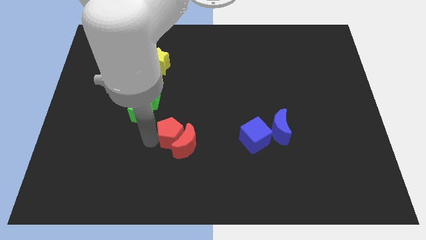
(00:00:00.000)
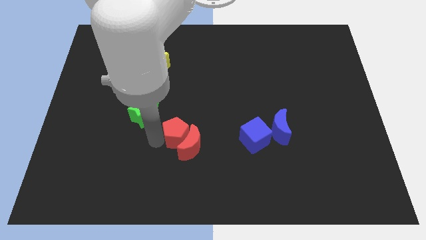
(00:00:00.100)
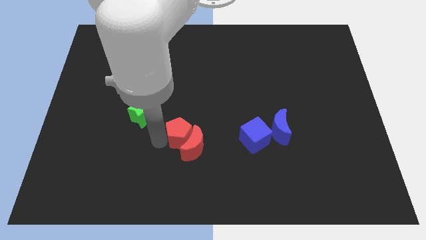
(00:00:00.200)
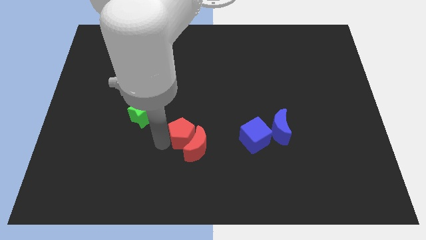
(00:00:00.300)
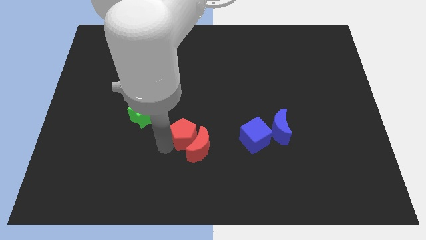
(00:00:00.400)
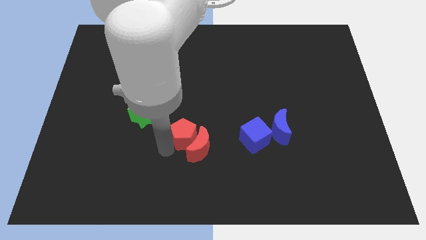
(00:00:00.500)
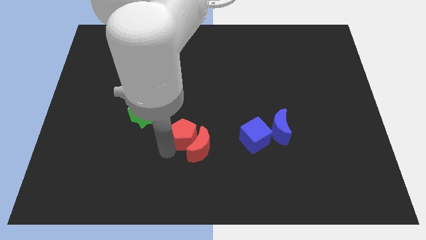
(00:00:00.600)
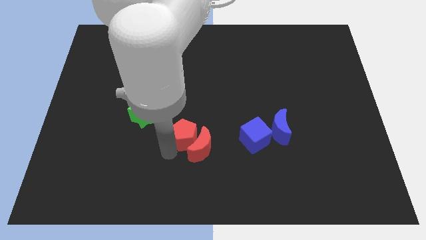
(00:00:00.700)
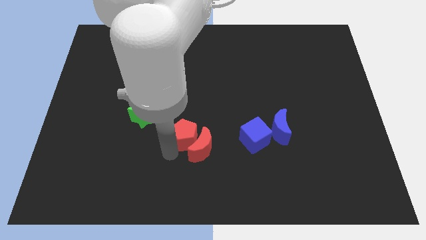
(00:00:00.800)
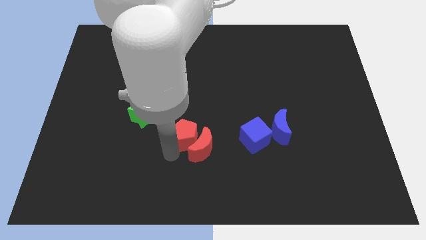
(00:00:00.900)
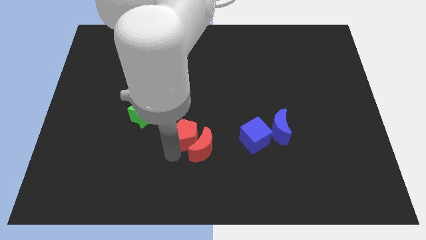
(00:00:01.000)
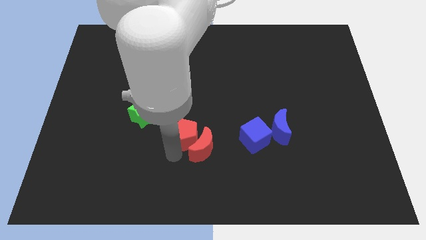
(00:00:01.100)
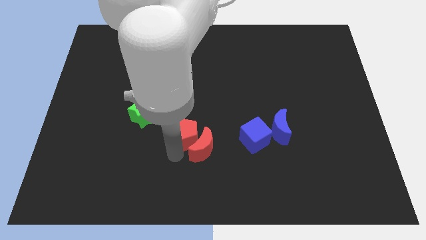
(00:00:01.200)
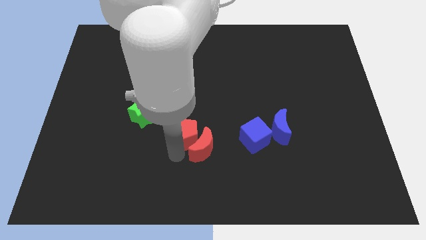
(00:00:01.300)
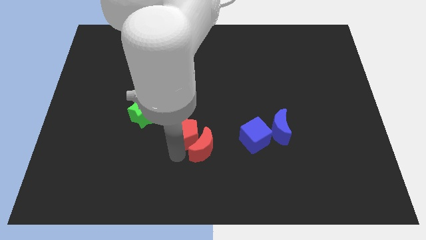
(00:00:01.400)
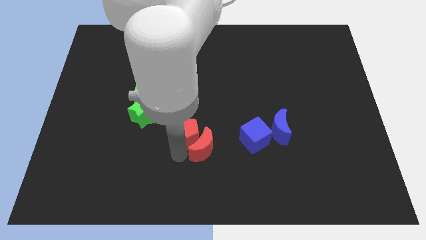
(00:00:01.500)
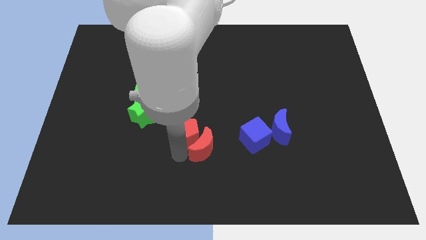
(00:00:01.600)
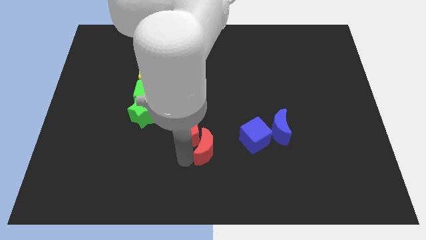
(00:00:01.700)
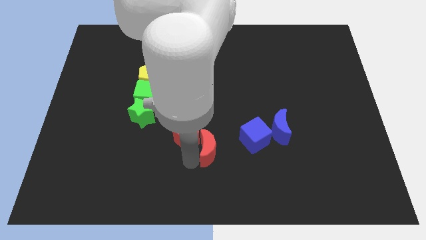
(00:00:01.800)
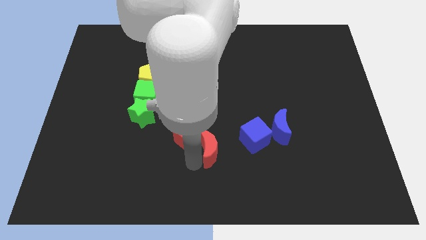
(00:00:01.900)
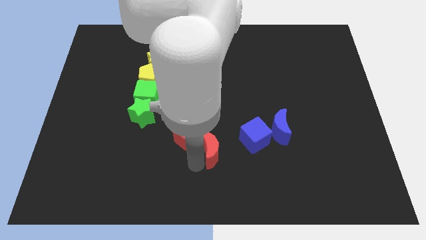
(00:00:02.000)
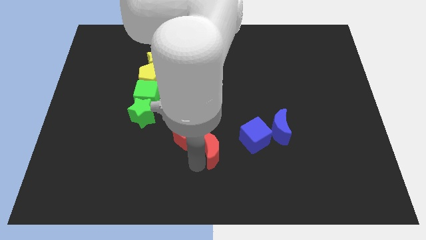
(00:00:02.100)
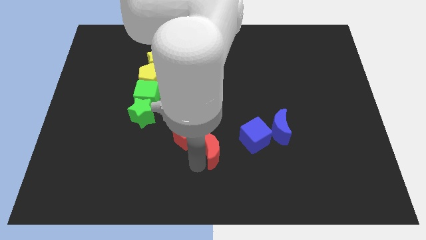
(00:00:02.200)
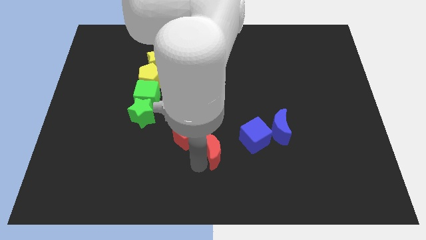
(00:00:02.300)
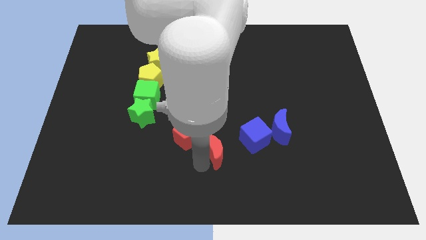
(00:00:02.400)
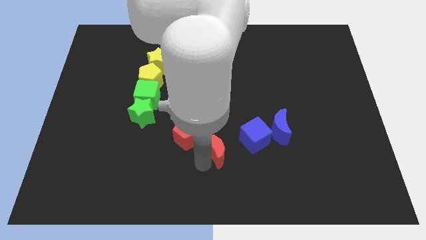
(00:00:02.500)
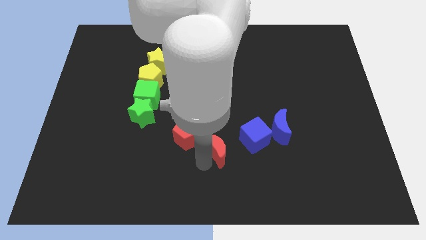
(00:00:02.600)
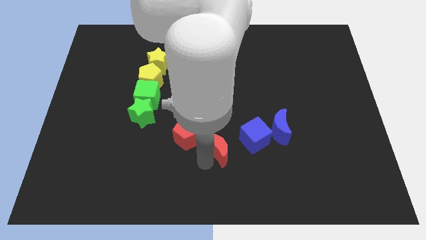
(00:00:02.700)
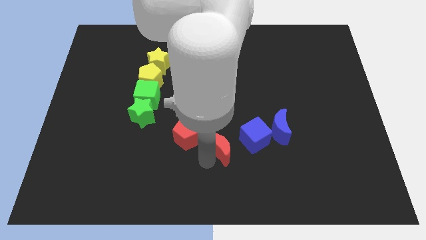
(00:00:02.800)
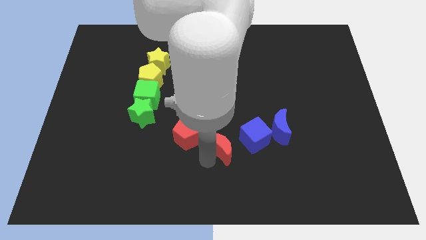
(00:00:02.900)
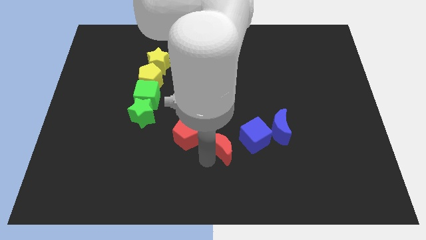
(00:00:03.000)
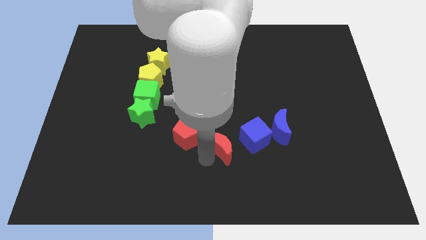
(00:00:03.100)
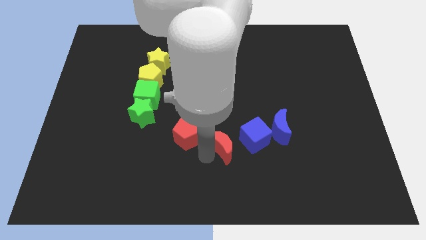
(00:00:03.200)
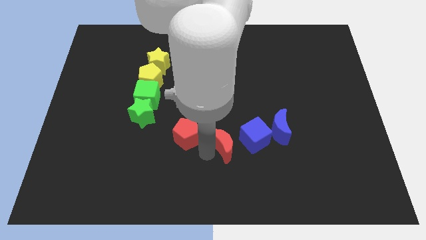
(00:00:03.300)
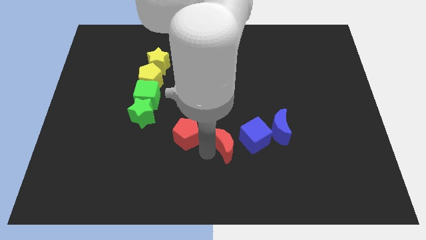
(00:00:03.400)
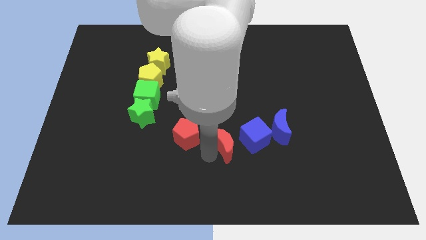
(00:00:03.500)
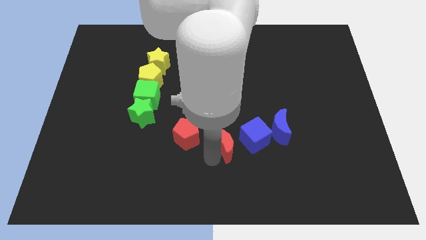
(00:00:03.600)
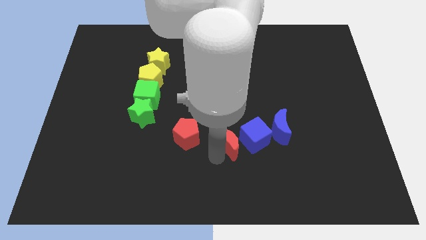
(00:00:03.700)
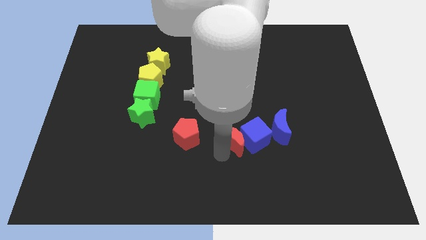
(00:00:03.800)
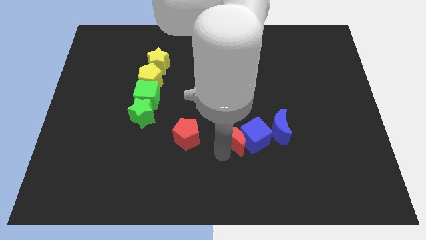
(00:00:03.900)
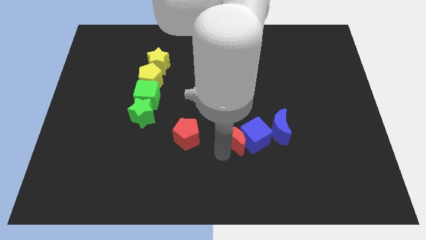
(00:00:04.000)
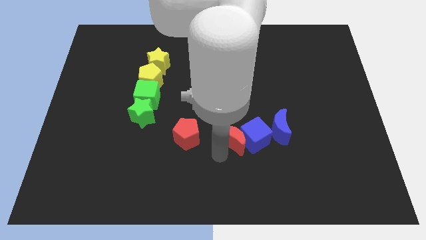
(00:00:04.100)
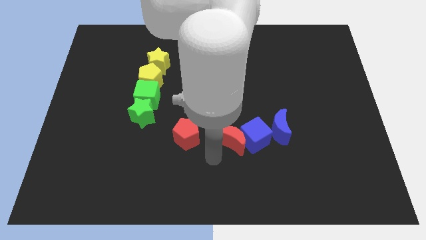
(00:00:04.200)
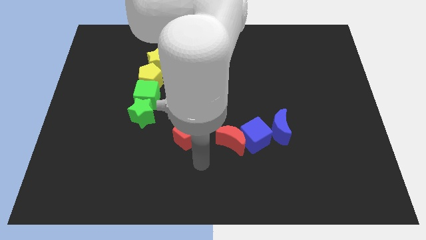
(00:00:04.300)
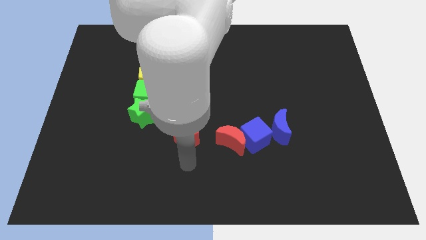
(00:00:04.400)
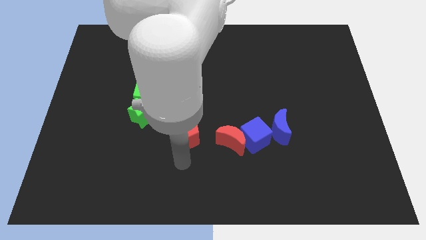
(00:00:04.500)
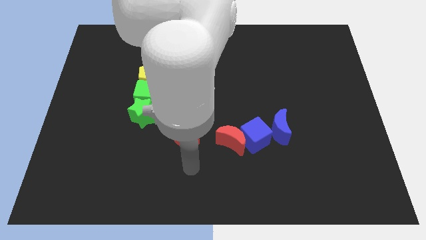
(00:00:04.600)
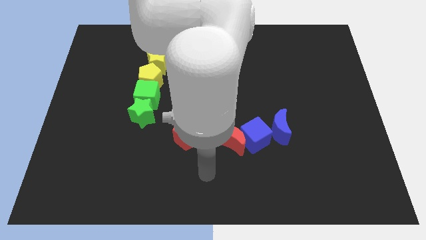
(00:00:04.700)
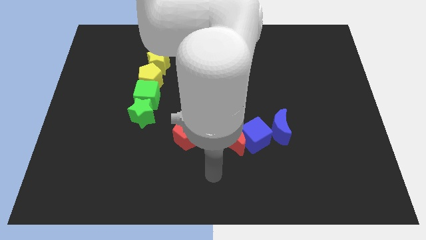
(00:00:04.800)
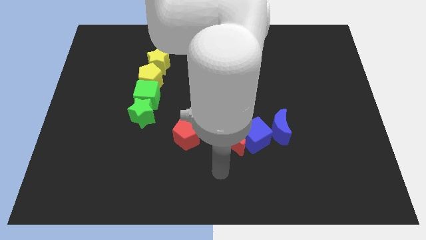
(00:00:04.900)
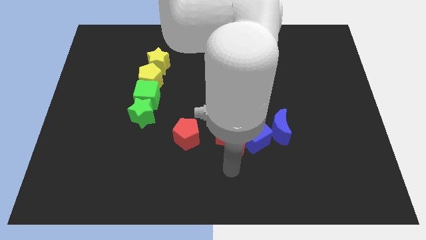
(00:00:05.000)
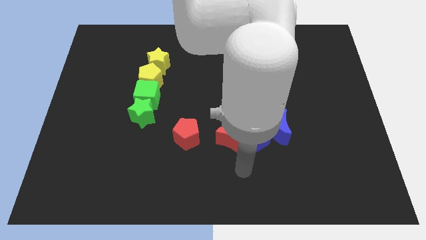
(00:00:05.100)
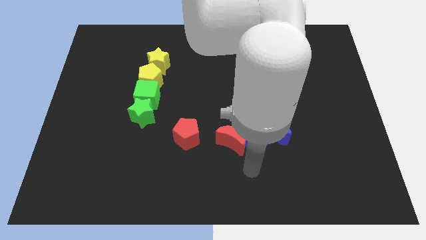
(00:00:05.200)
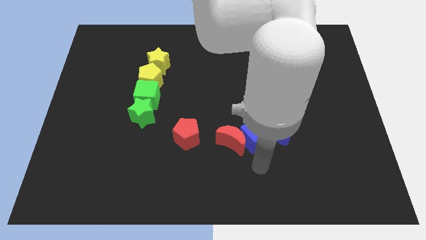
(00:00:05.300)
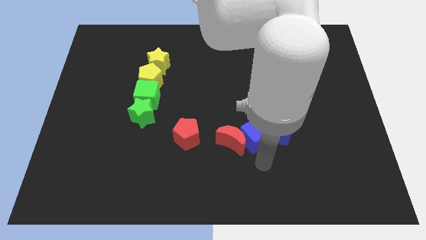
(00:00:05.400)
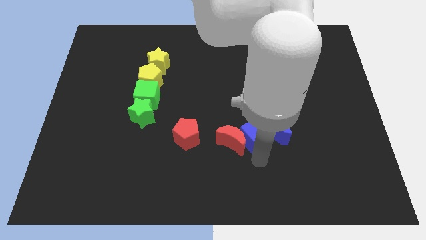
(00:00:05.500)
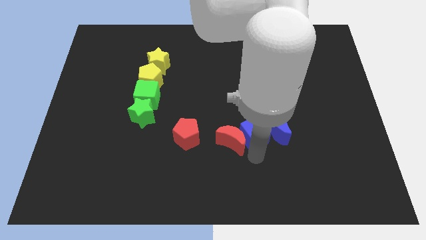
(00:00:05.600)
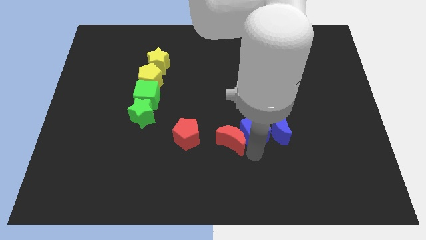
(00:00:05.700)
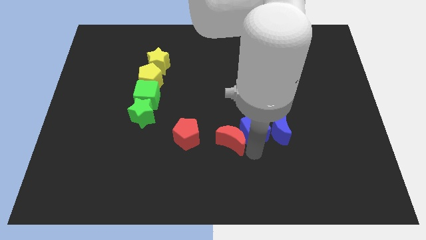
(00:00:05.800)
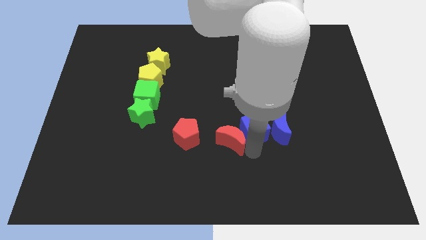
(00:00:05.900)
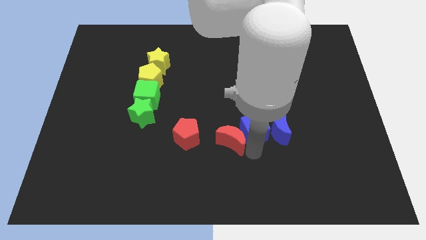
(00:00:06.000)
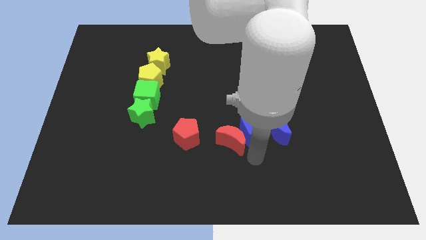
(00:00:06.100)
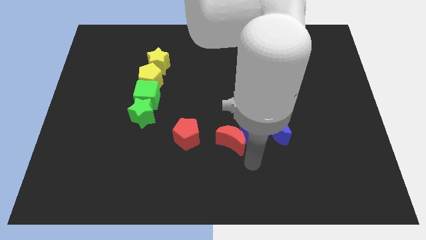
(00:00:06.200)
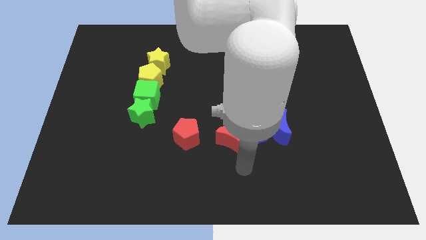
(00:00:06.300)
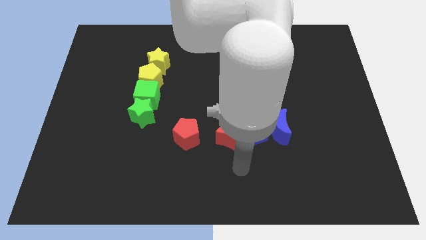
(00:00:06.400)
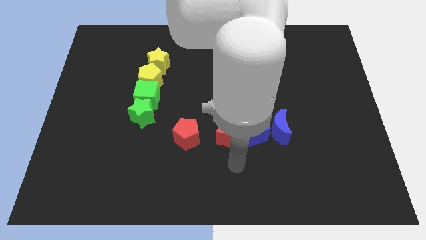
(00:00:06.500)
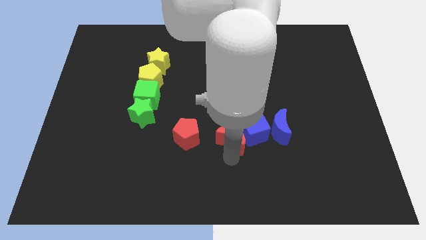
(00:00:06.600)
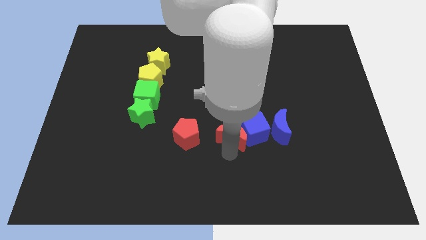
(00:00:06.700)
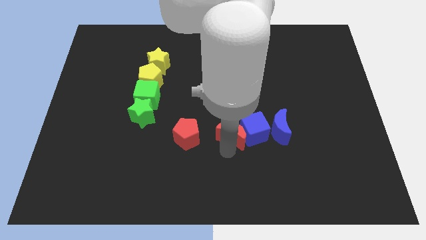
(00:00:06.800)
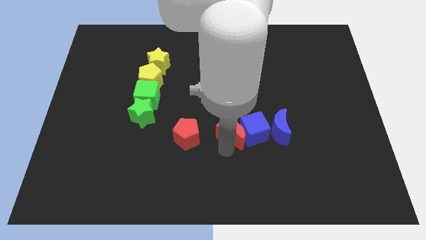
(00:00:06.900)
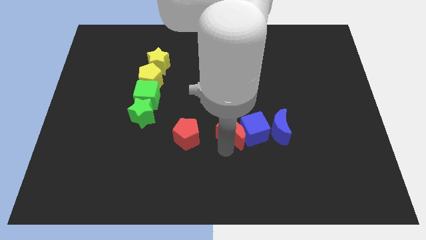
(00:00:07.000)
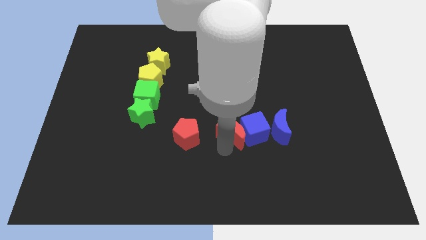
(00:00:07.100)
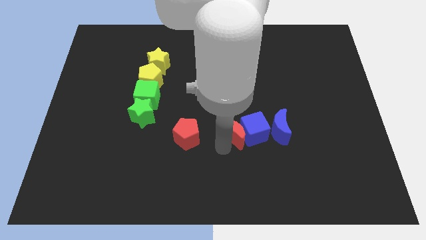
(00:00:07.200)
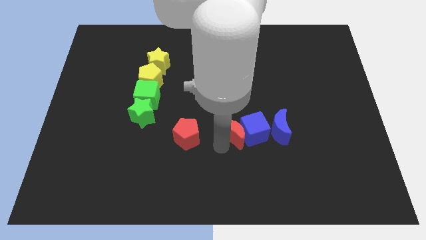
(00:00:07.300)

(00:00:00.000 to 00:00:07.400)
push the red crescent close to the right side of the blue cube

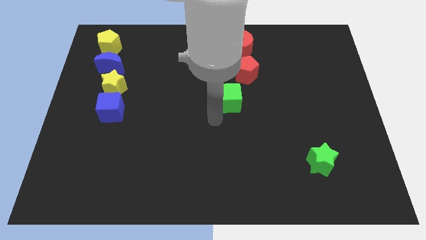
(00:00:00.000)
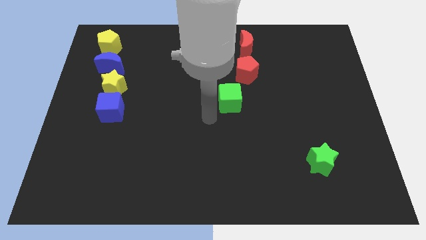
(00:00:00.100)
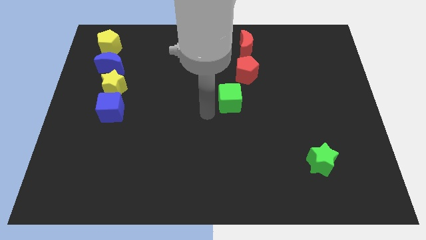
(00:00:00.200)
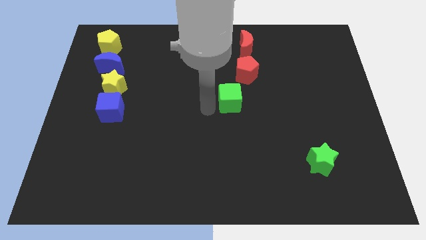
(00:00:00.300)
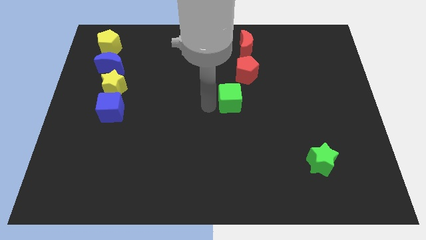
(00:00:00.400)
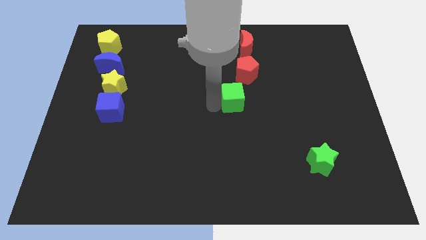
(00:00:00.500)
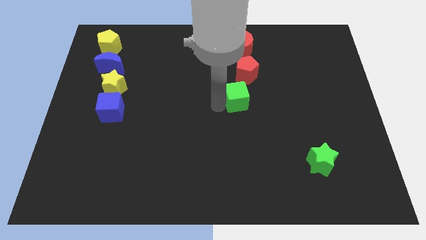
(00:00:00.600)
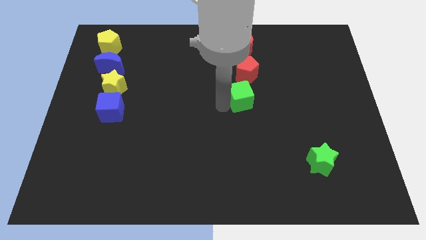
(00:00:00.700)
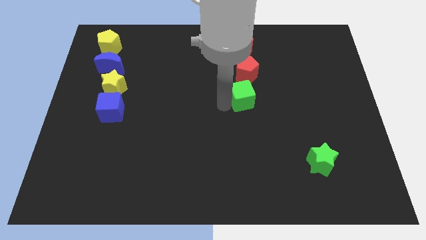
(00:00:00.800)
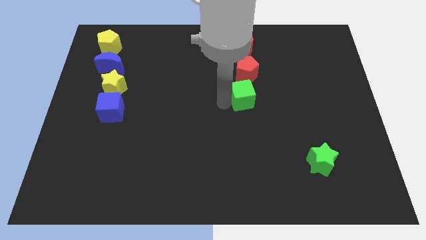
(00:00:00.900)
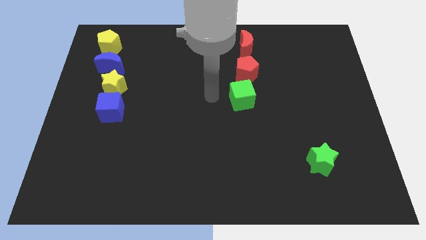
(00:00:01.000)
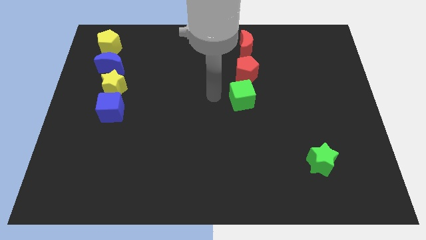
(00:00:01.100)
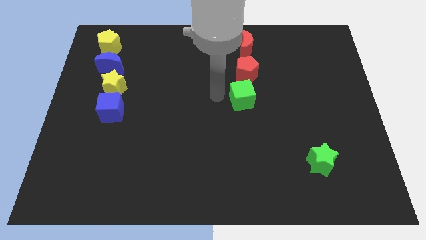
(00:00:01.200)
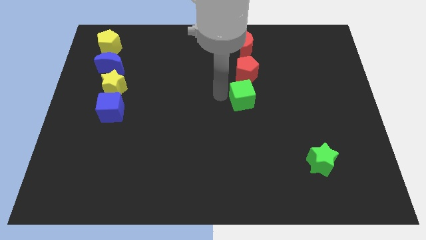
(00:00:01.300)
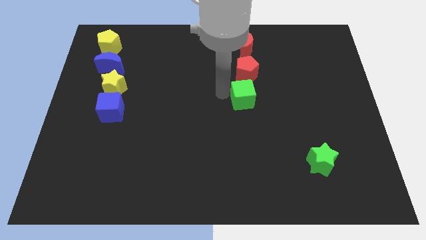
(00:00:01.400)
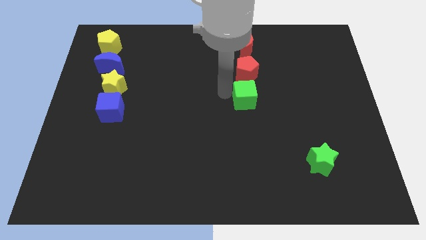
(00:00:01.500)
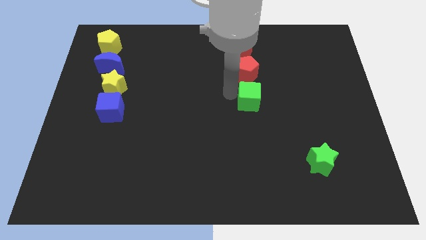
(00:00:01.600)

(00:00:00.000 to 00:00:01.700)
put the green cube at the bottom side of the red pentagon

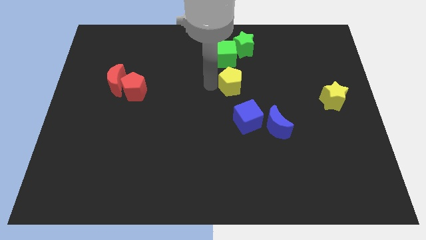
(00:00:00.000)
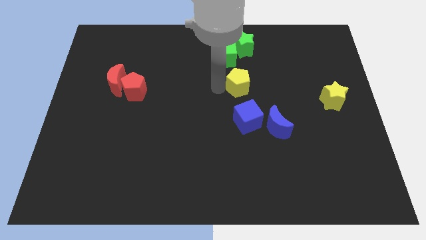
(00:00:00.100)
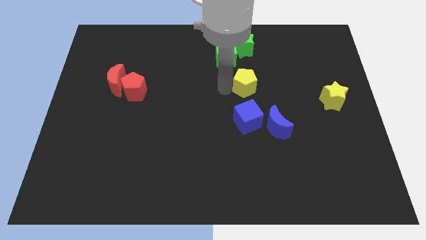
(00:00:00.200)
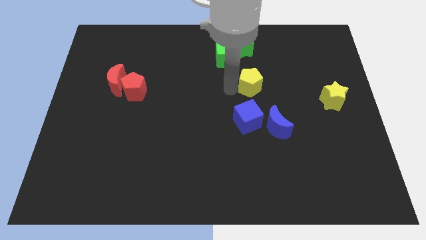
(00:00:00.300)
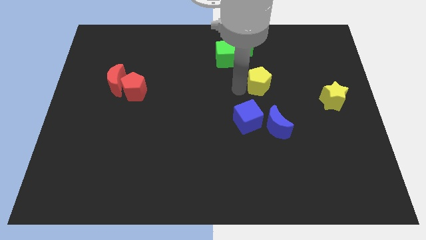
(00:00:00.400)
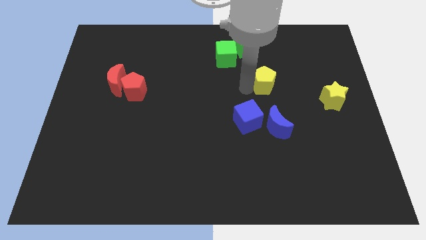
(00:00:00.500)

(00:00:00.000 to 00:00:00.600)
place yellow pentagon below blue crescent
